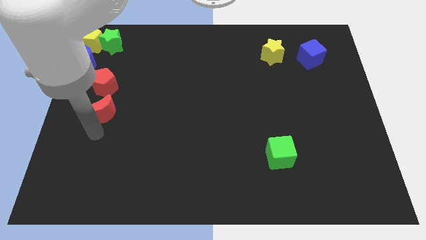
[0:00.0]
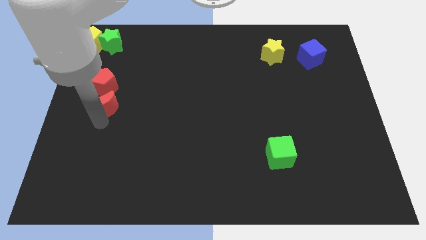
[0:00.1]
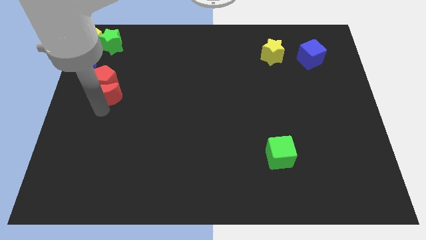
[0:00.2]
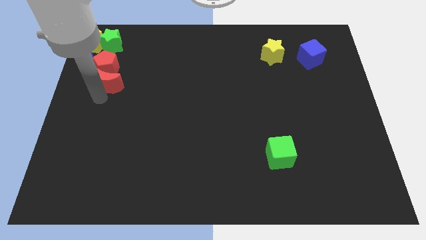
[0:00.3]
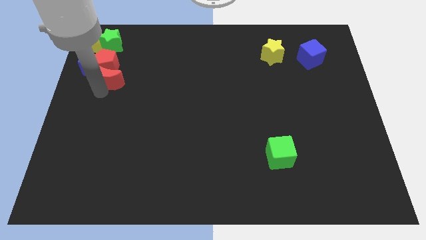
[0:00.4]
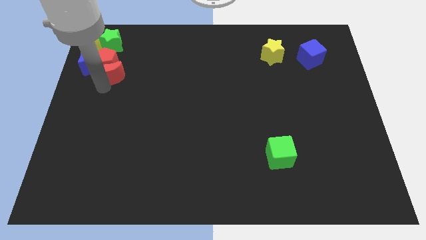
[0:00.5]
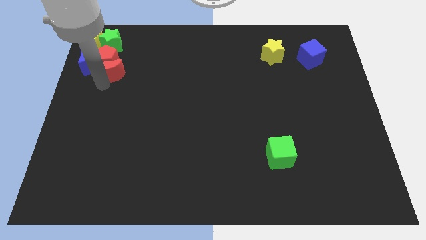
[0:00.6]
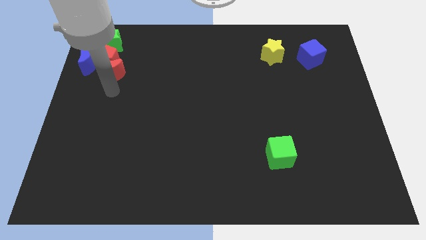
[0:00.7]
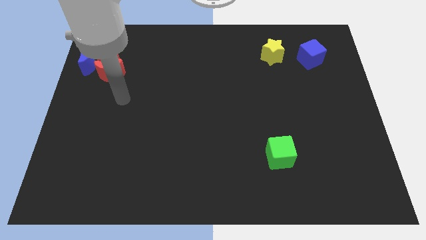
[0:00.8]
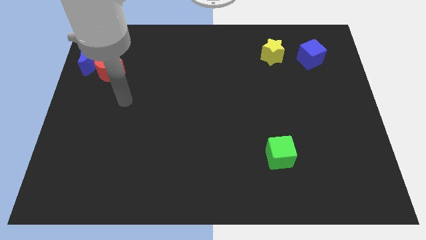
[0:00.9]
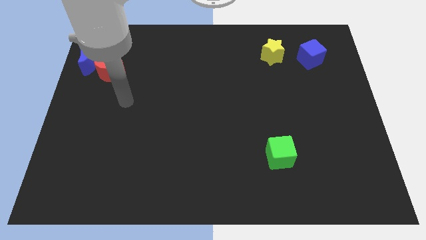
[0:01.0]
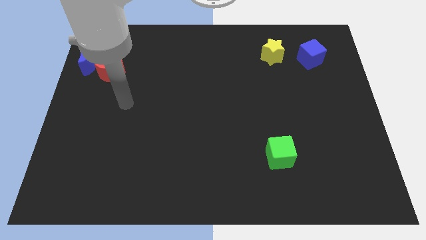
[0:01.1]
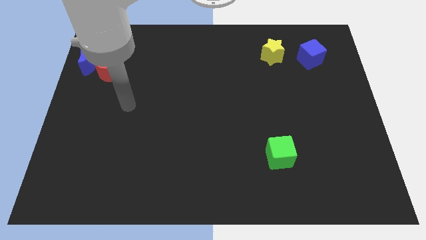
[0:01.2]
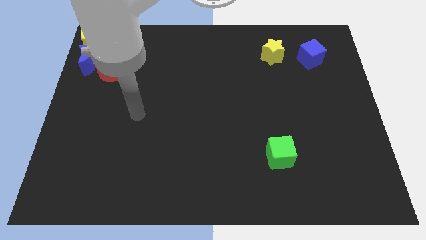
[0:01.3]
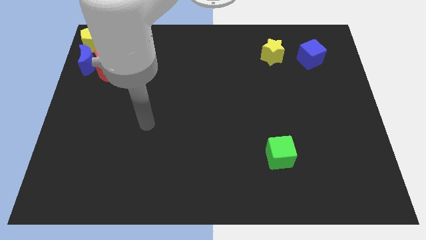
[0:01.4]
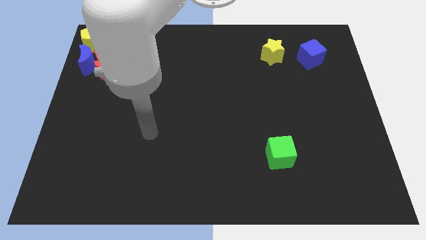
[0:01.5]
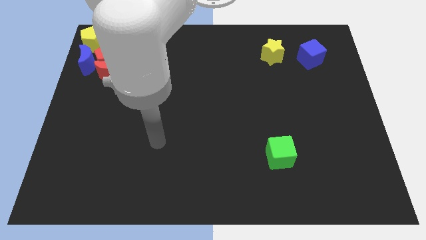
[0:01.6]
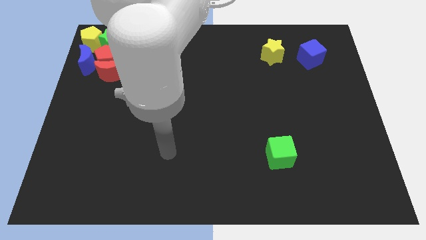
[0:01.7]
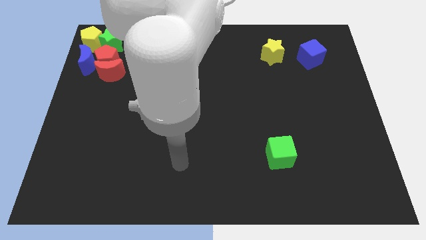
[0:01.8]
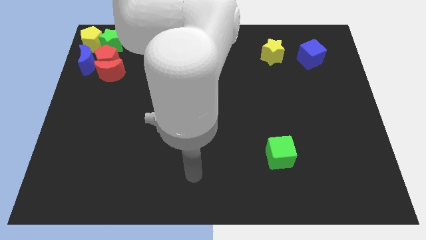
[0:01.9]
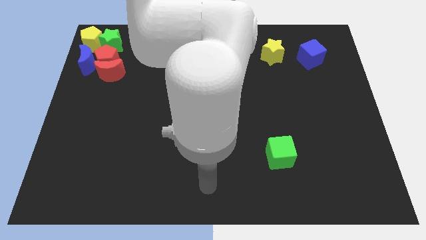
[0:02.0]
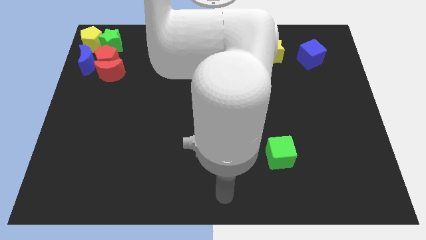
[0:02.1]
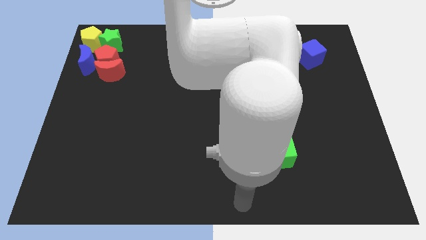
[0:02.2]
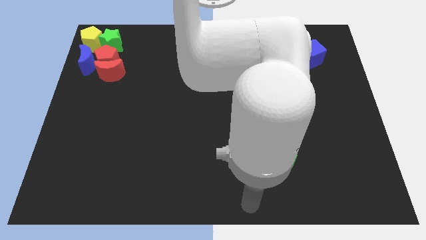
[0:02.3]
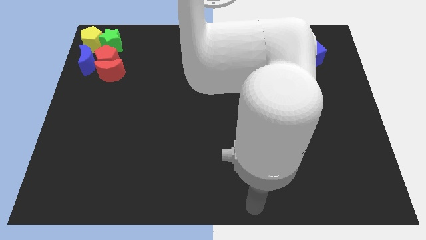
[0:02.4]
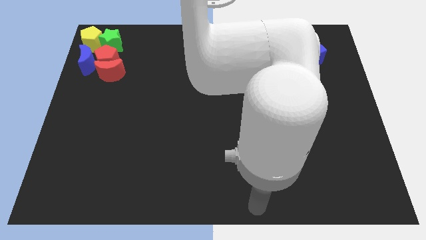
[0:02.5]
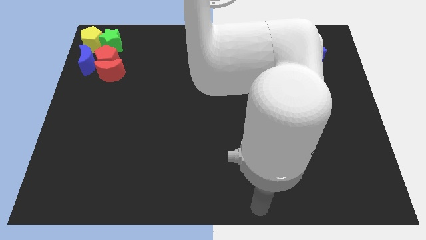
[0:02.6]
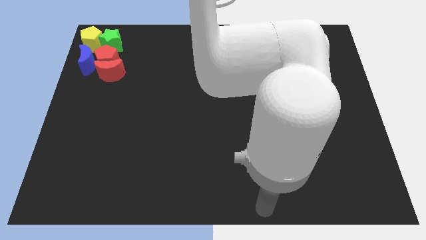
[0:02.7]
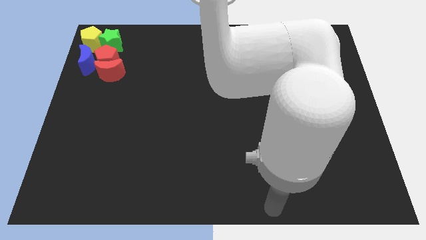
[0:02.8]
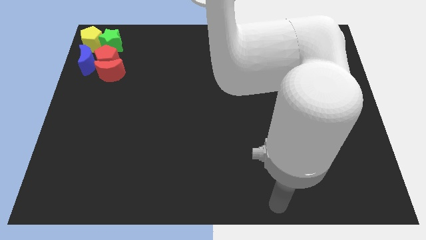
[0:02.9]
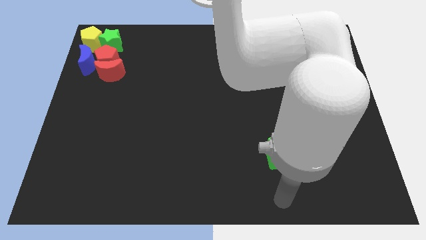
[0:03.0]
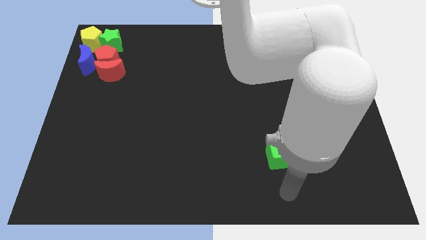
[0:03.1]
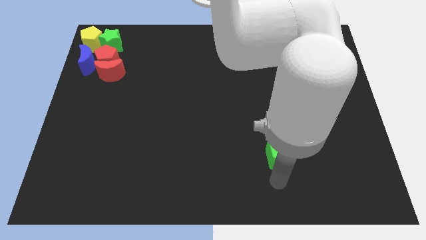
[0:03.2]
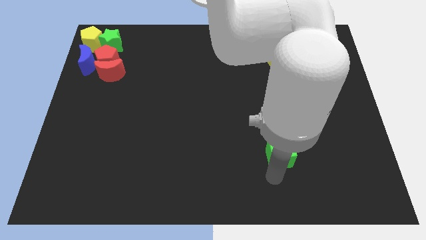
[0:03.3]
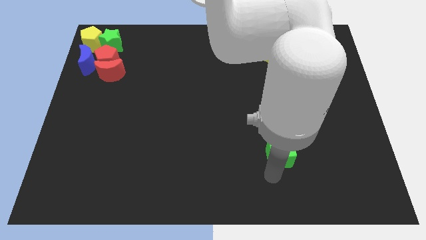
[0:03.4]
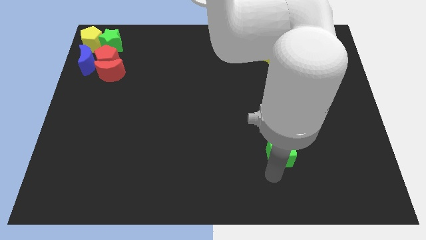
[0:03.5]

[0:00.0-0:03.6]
place the arm below the green cube

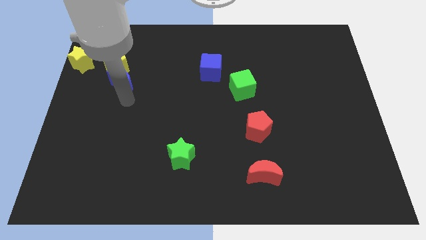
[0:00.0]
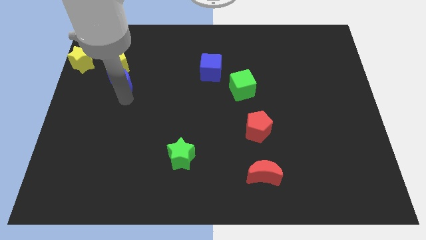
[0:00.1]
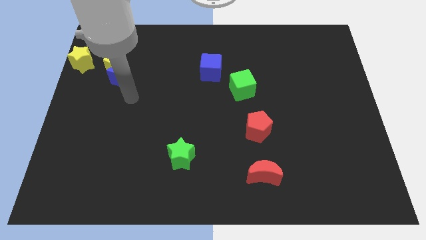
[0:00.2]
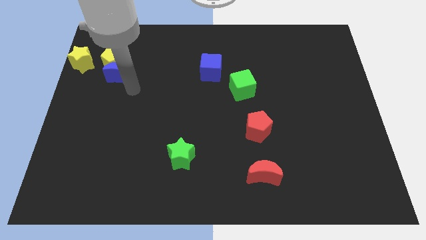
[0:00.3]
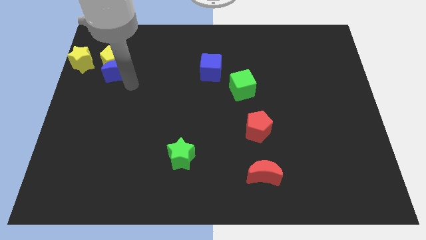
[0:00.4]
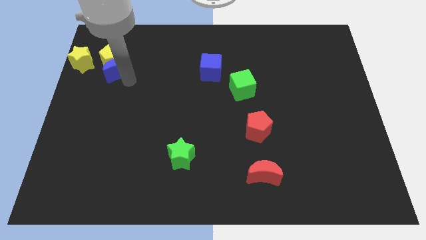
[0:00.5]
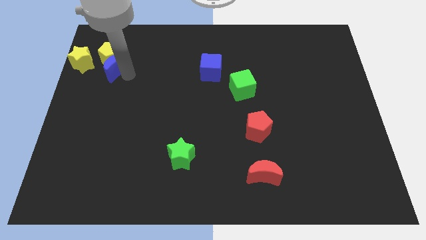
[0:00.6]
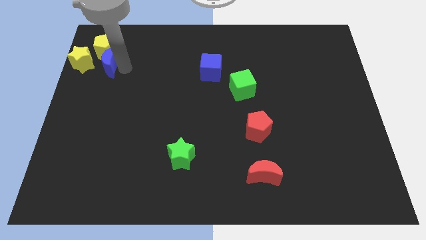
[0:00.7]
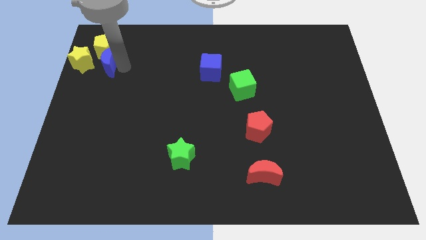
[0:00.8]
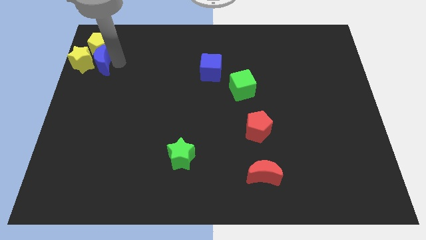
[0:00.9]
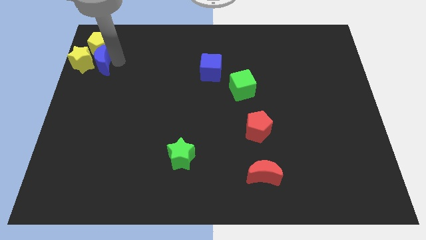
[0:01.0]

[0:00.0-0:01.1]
push blue cube in to yellow pentagon

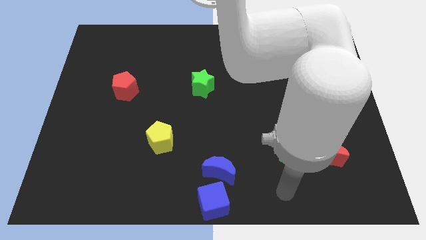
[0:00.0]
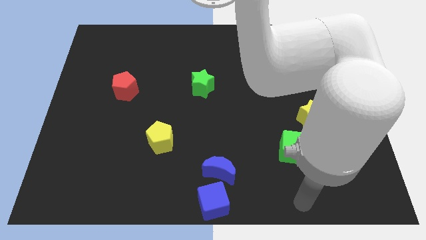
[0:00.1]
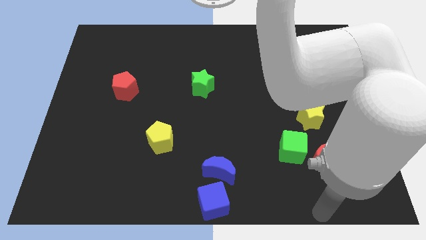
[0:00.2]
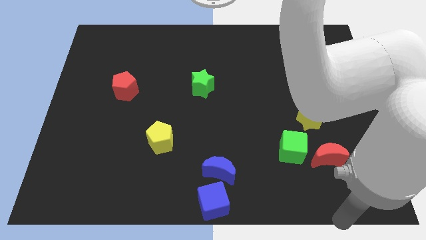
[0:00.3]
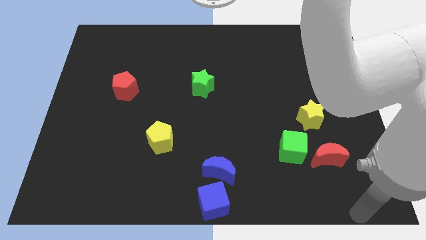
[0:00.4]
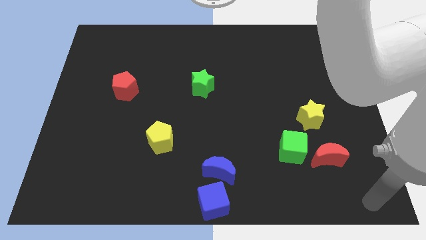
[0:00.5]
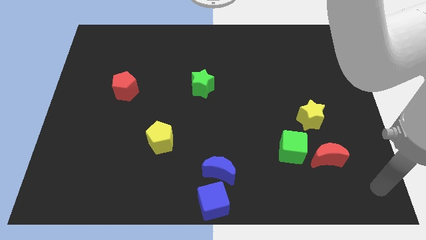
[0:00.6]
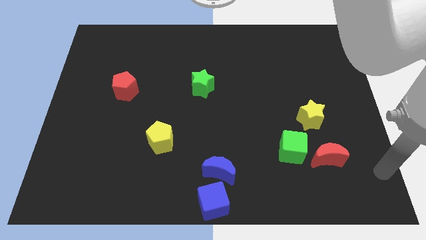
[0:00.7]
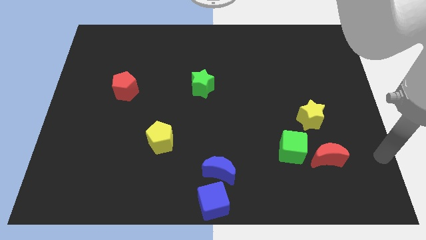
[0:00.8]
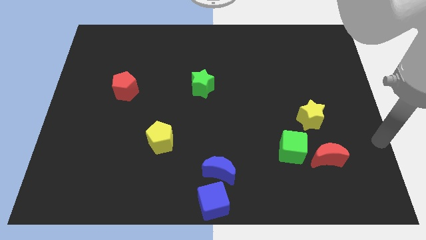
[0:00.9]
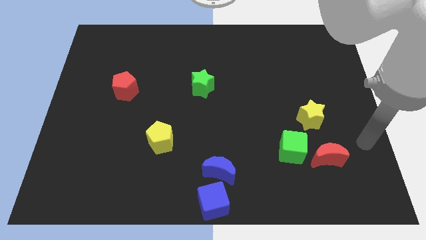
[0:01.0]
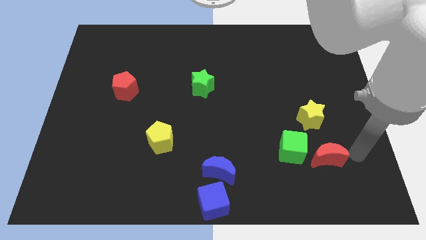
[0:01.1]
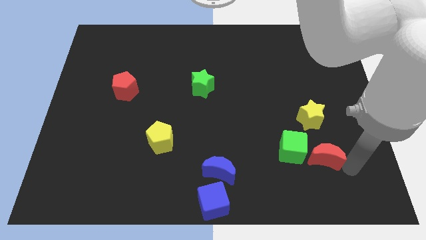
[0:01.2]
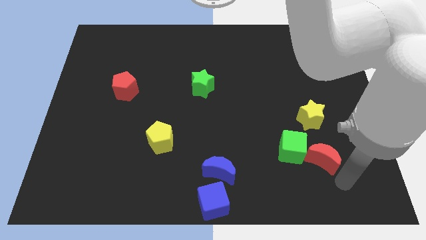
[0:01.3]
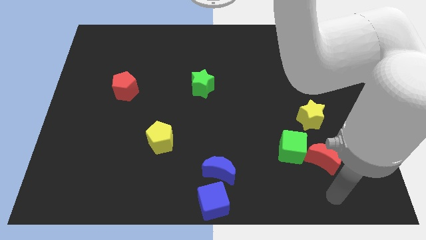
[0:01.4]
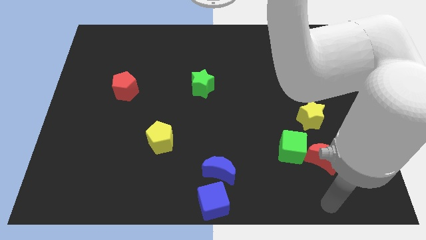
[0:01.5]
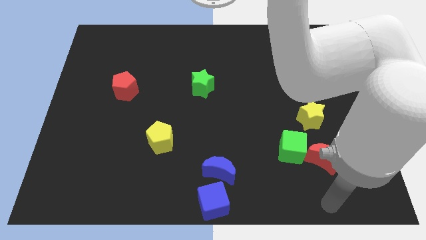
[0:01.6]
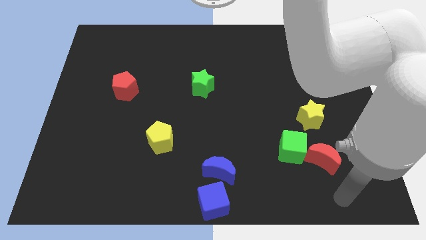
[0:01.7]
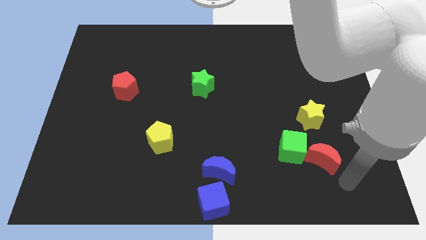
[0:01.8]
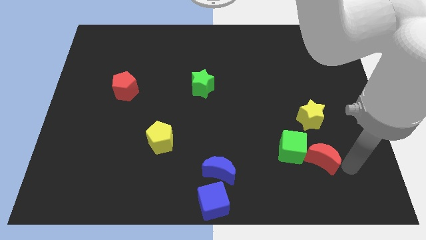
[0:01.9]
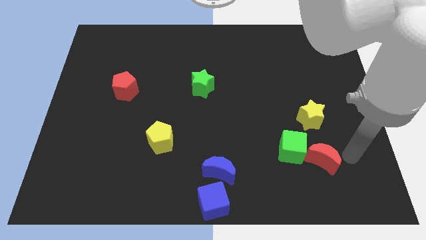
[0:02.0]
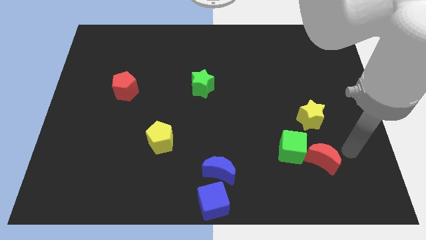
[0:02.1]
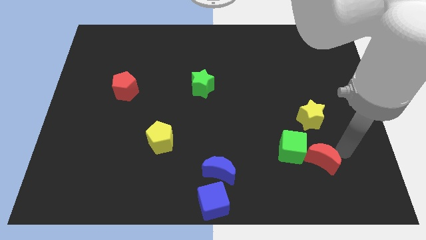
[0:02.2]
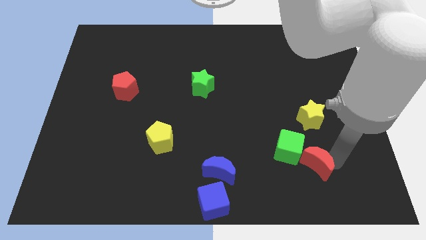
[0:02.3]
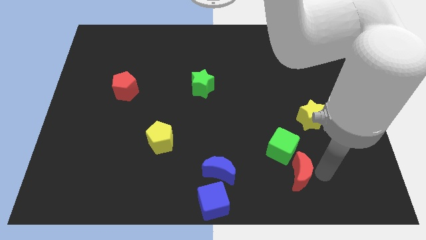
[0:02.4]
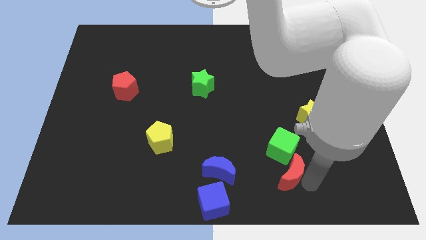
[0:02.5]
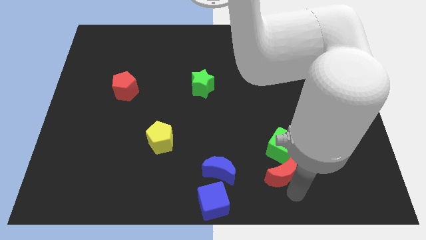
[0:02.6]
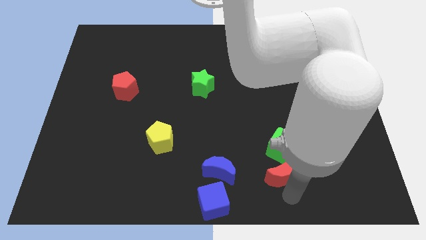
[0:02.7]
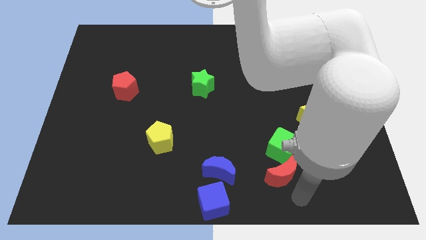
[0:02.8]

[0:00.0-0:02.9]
push the red crescent to the bottom of the green cube

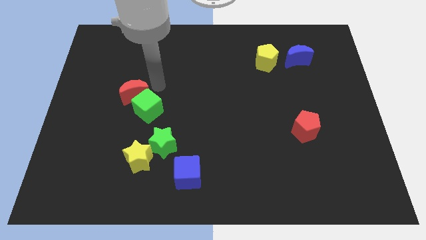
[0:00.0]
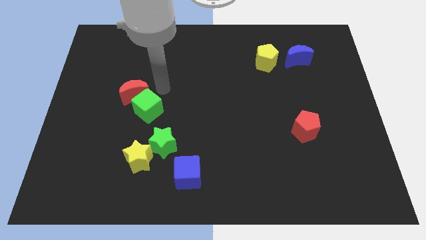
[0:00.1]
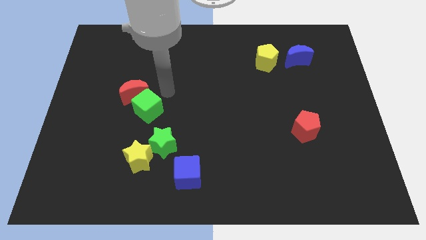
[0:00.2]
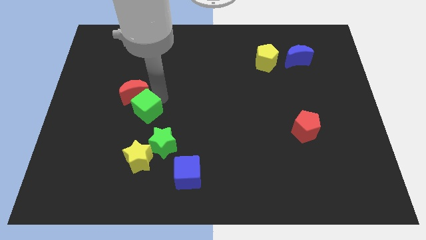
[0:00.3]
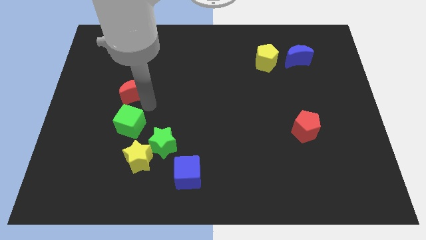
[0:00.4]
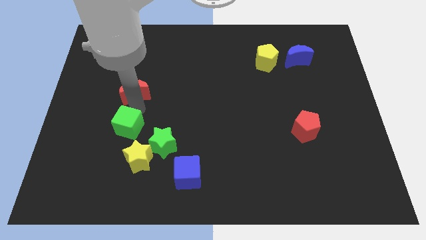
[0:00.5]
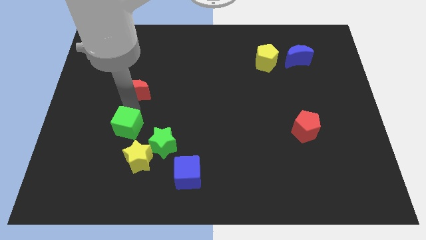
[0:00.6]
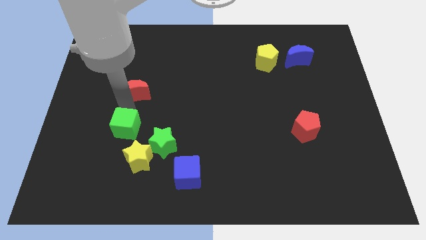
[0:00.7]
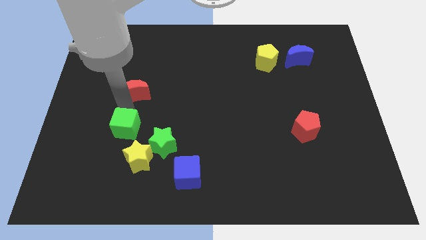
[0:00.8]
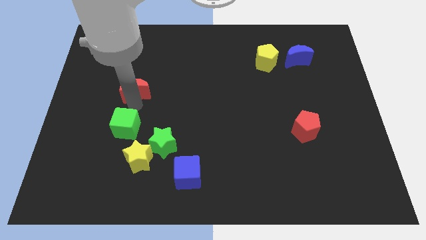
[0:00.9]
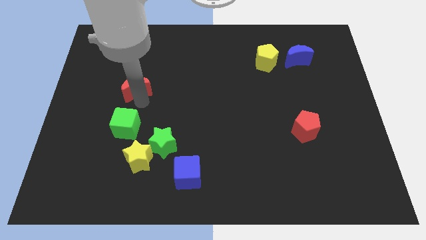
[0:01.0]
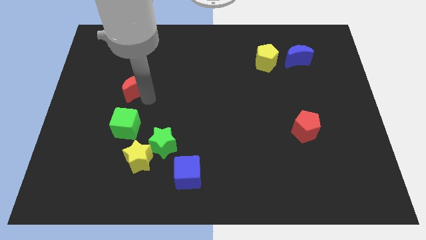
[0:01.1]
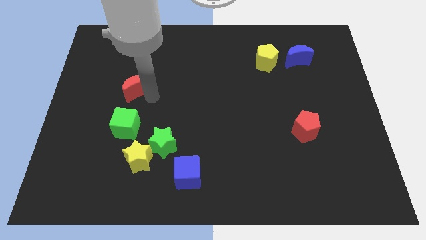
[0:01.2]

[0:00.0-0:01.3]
separate the green cube and red moon
